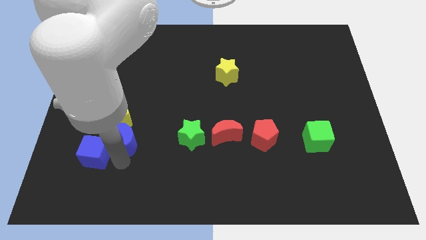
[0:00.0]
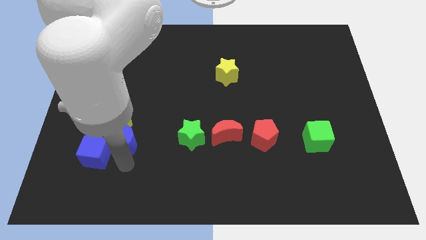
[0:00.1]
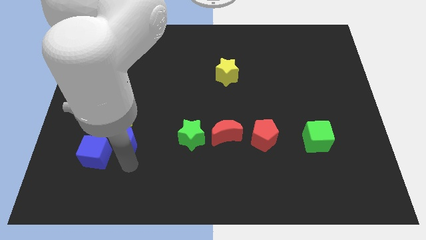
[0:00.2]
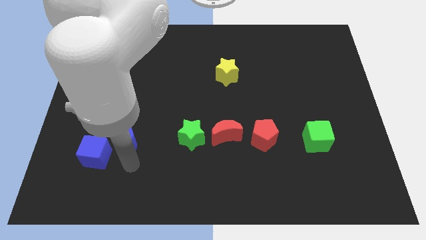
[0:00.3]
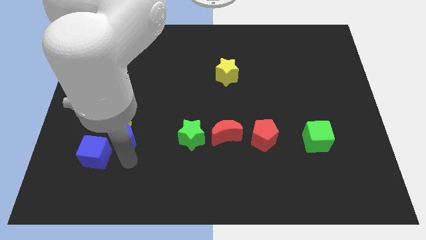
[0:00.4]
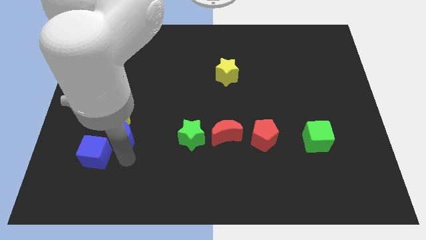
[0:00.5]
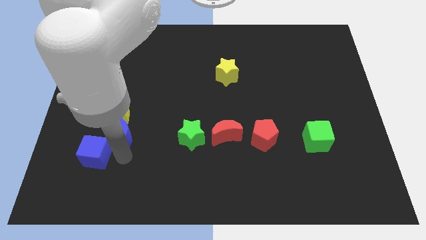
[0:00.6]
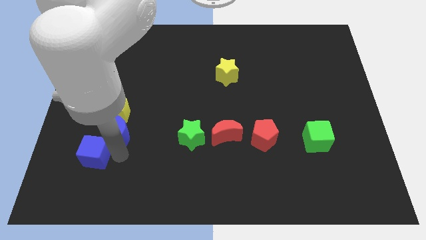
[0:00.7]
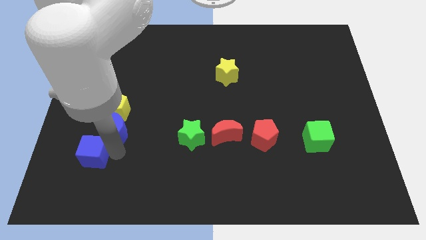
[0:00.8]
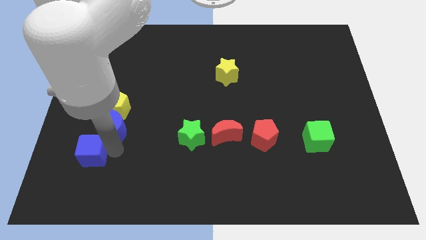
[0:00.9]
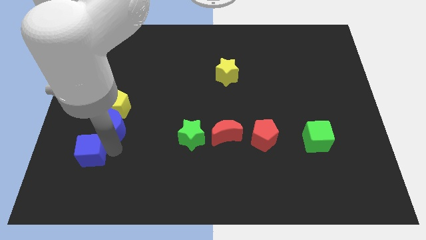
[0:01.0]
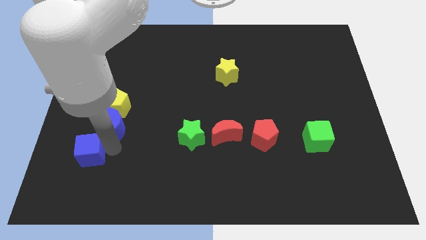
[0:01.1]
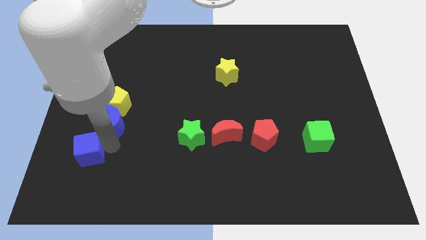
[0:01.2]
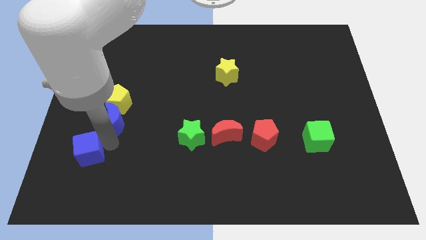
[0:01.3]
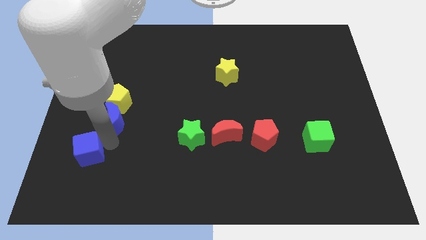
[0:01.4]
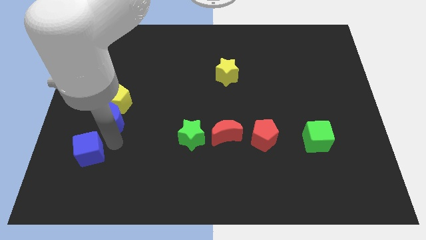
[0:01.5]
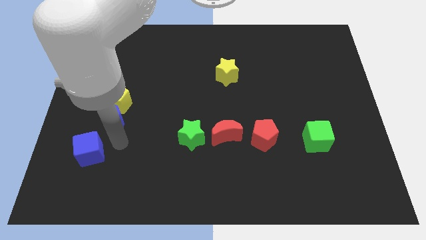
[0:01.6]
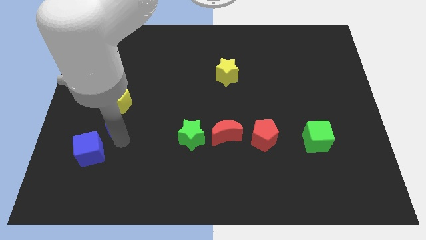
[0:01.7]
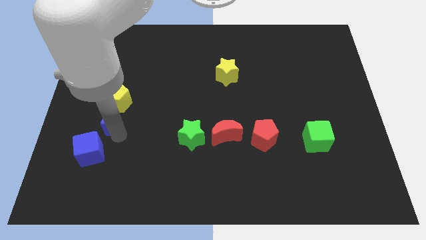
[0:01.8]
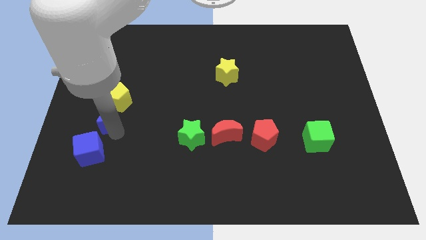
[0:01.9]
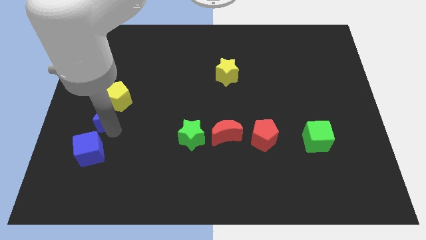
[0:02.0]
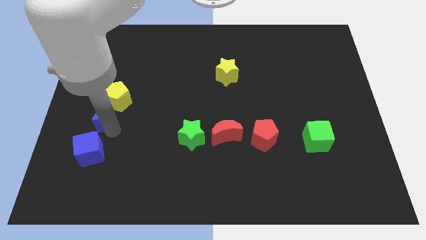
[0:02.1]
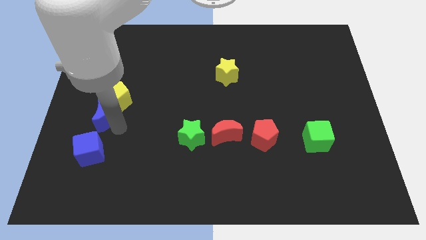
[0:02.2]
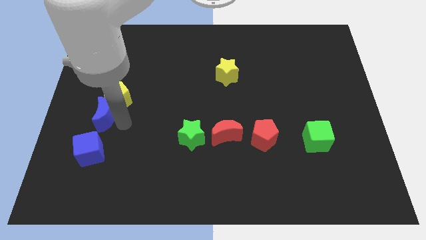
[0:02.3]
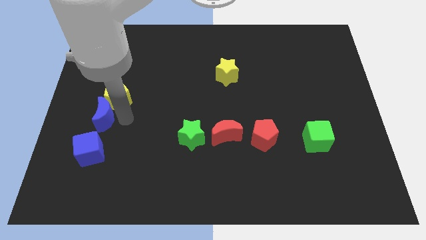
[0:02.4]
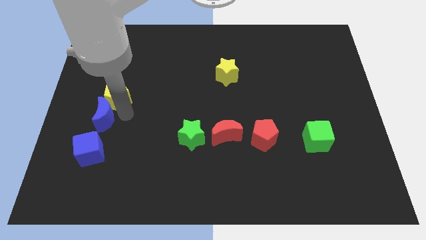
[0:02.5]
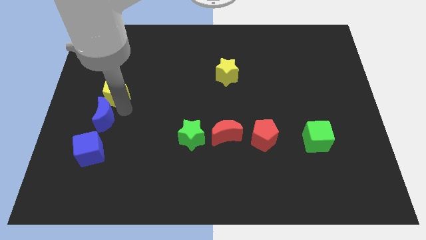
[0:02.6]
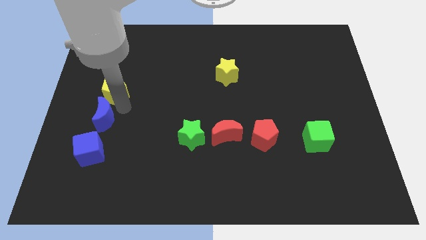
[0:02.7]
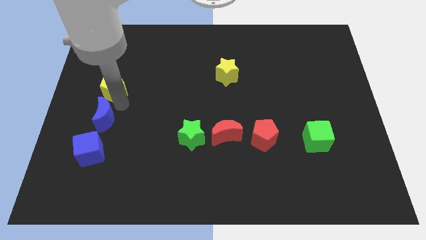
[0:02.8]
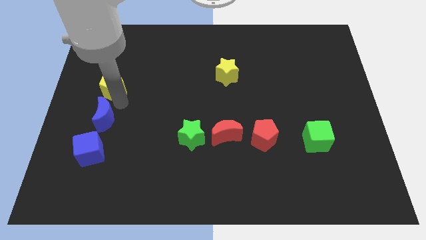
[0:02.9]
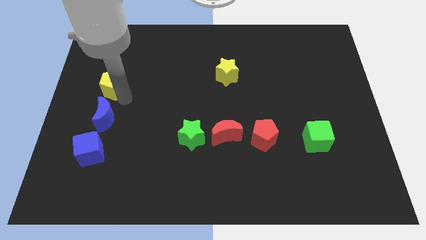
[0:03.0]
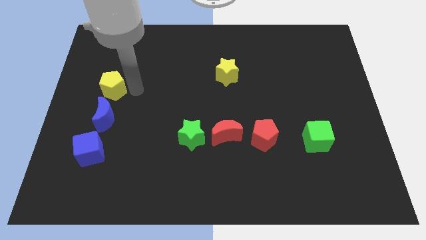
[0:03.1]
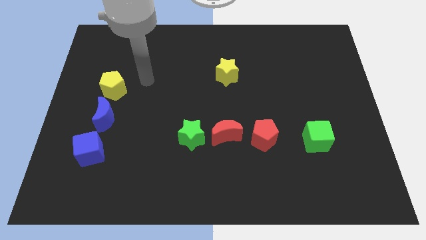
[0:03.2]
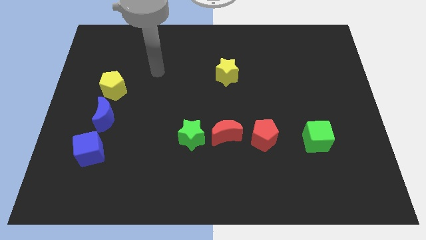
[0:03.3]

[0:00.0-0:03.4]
place the blue crescent in between the blue cube and yellow pentagon

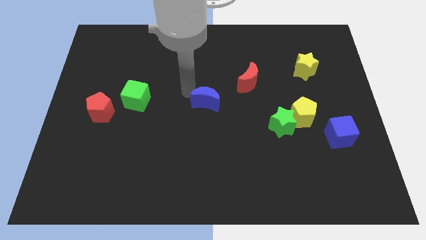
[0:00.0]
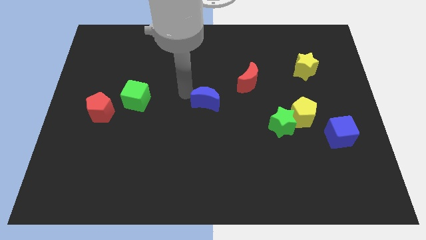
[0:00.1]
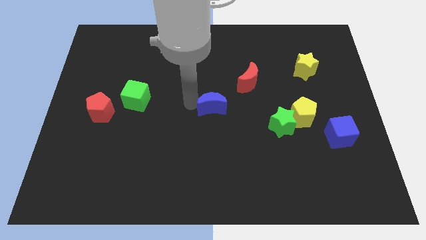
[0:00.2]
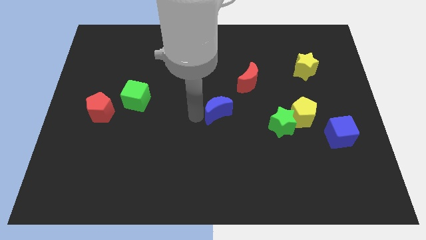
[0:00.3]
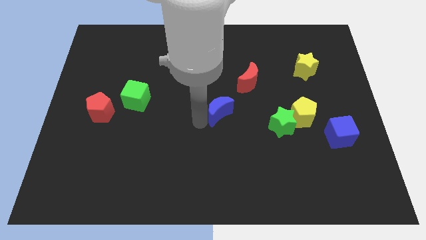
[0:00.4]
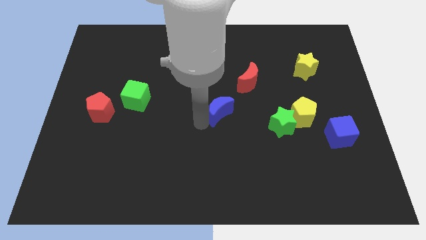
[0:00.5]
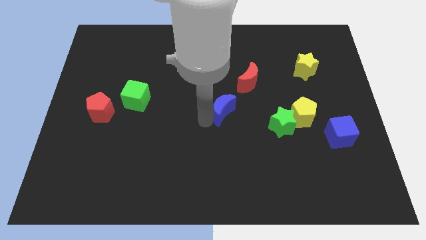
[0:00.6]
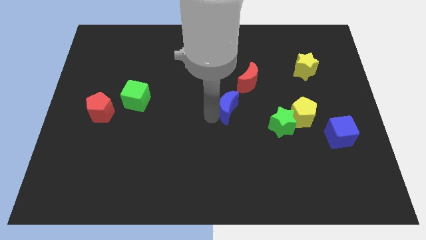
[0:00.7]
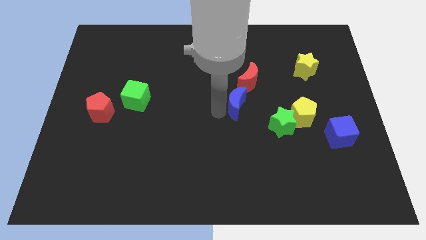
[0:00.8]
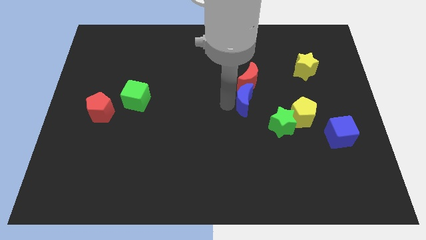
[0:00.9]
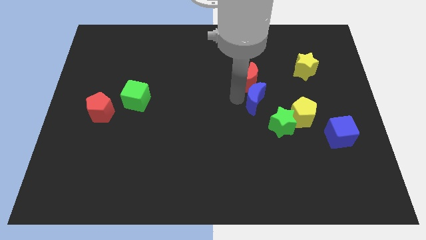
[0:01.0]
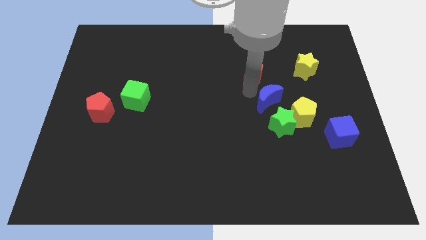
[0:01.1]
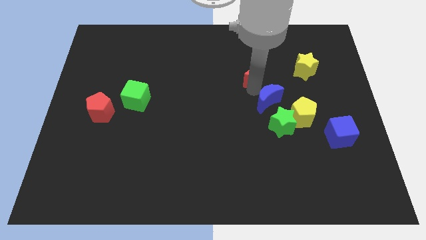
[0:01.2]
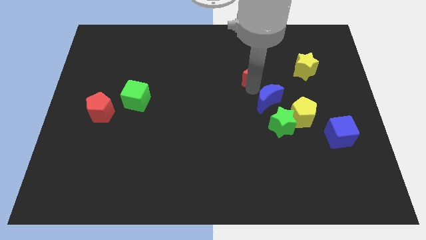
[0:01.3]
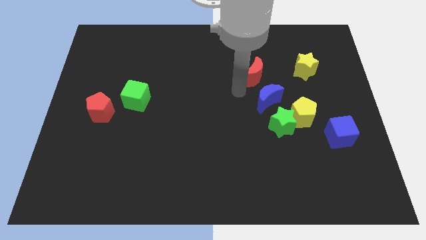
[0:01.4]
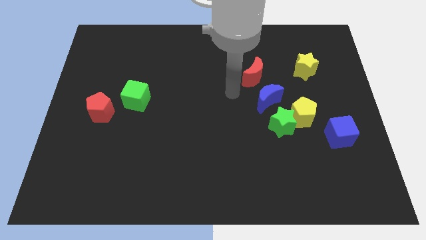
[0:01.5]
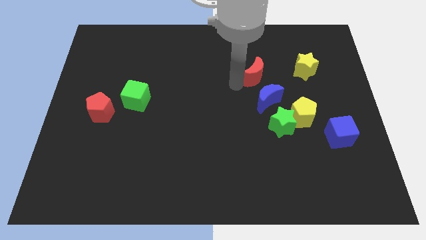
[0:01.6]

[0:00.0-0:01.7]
push the blue moon to the top side of the green star

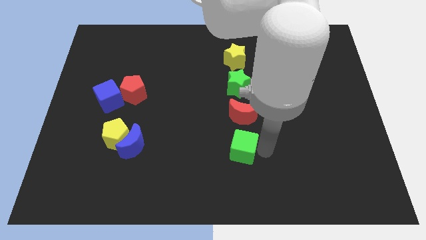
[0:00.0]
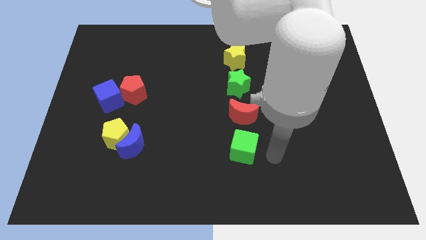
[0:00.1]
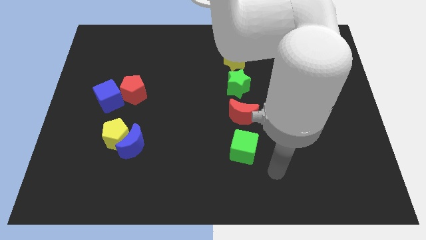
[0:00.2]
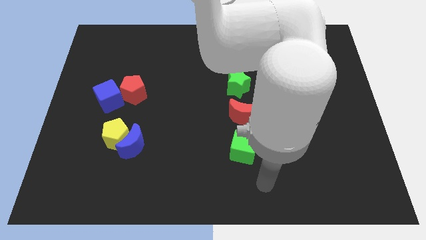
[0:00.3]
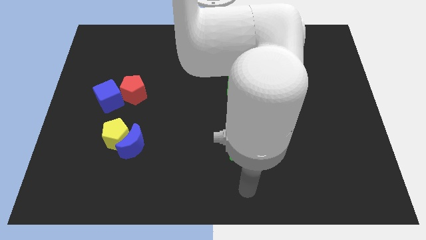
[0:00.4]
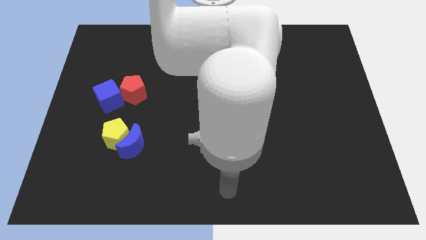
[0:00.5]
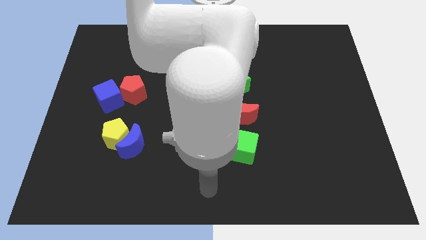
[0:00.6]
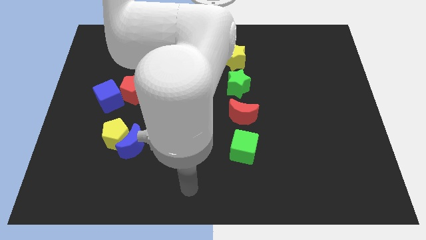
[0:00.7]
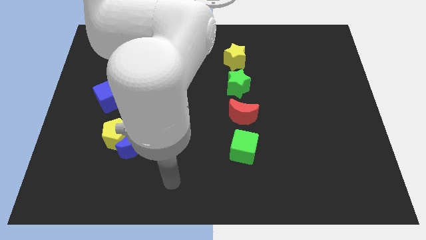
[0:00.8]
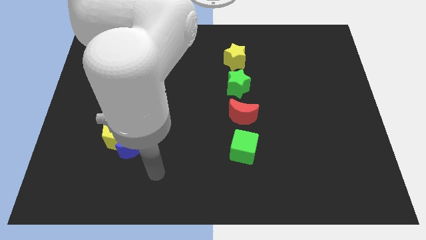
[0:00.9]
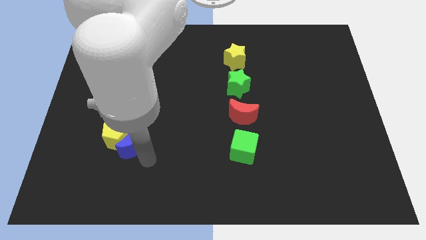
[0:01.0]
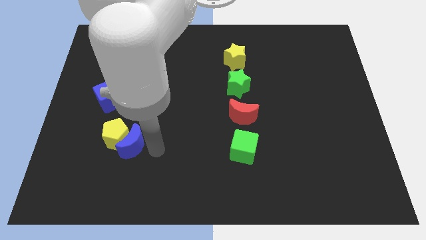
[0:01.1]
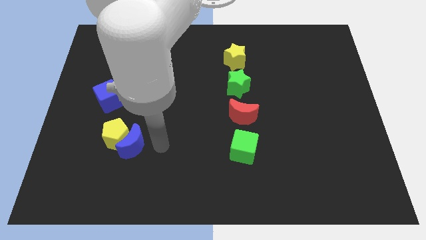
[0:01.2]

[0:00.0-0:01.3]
go and place your hand at the right of the blue crescent

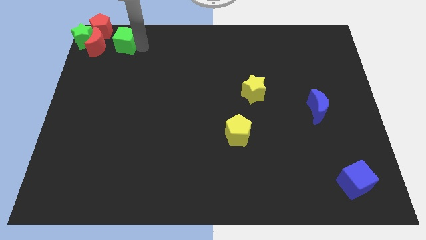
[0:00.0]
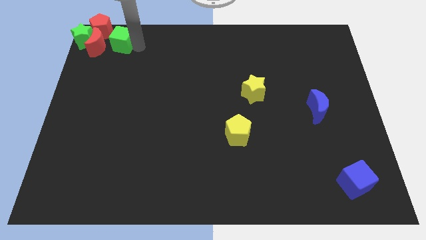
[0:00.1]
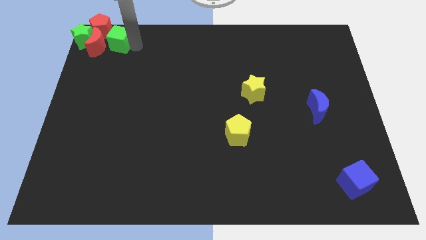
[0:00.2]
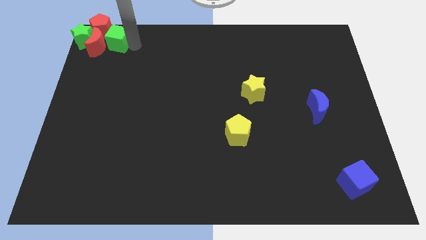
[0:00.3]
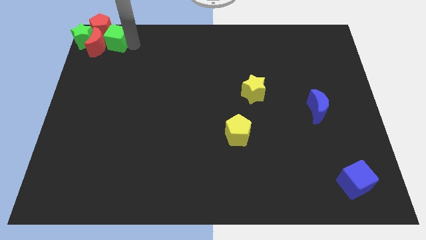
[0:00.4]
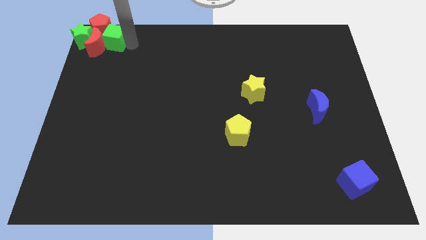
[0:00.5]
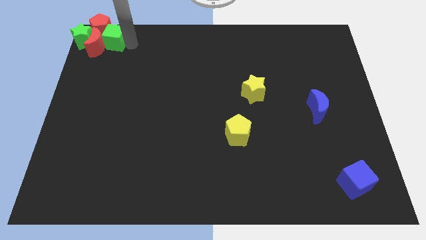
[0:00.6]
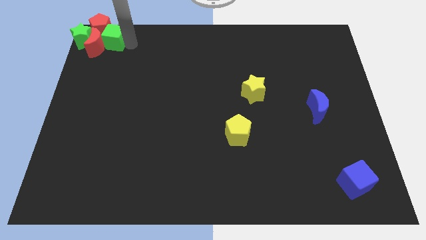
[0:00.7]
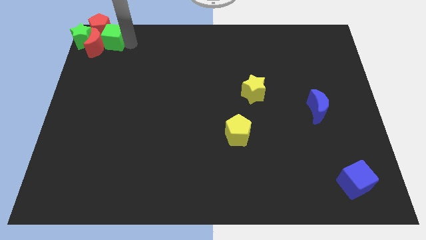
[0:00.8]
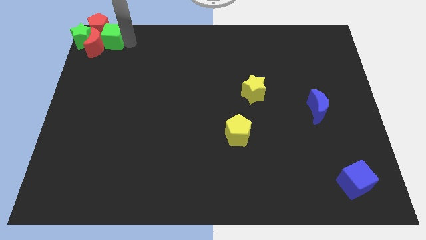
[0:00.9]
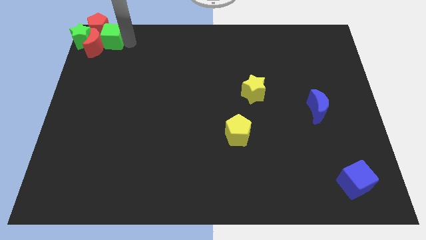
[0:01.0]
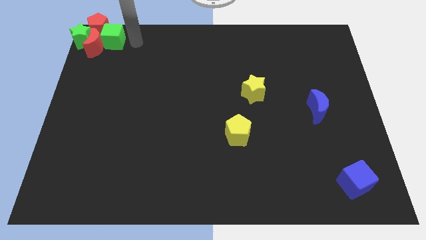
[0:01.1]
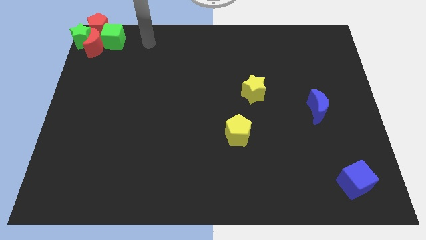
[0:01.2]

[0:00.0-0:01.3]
push the green cube into the group of blocks

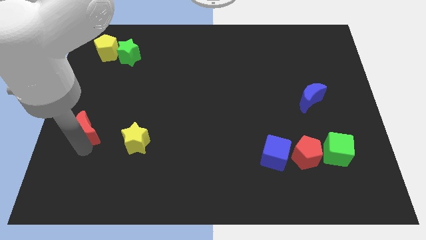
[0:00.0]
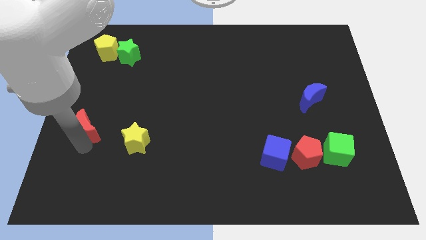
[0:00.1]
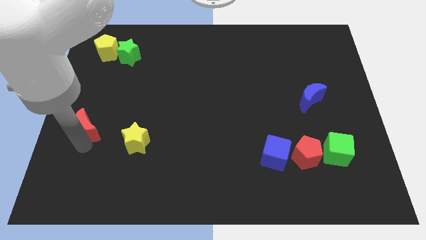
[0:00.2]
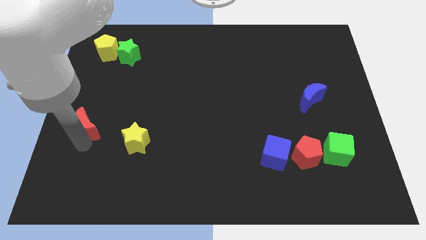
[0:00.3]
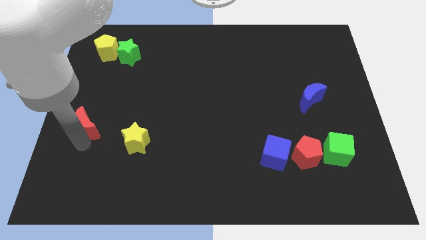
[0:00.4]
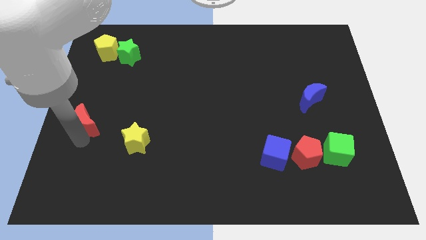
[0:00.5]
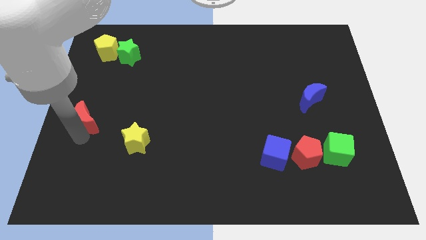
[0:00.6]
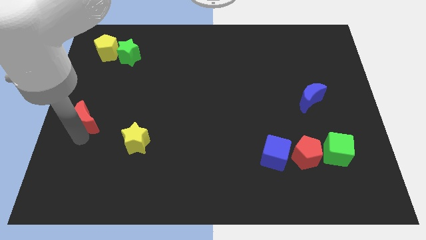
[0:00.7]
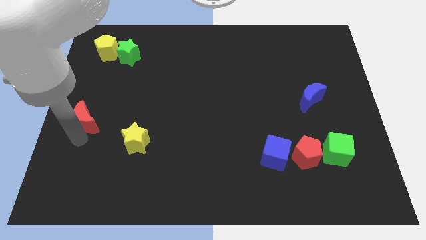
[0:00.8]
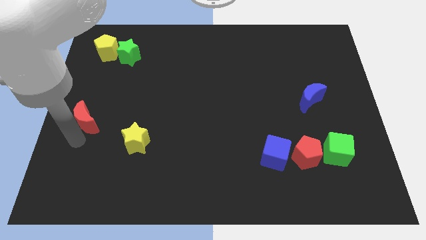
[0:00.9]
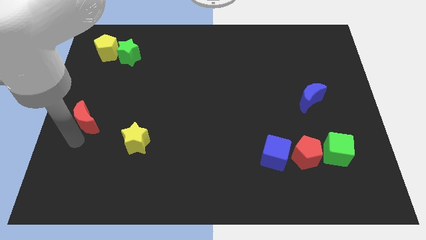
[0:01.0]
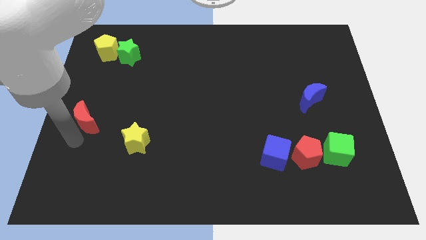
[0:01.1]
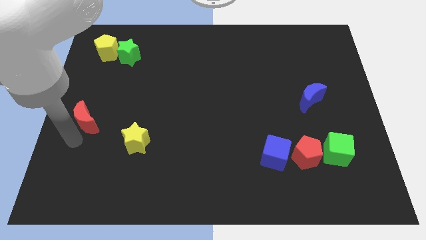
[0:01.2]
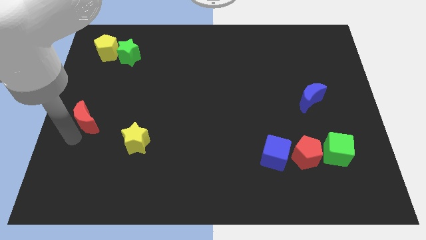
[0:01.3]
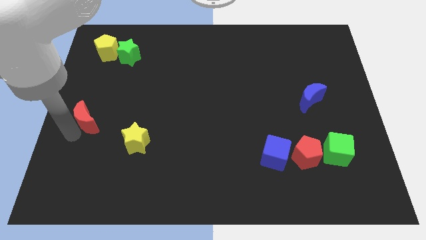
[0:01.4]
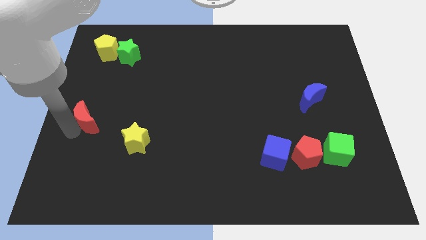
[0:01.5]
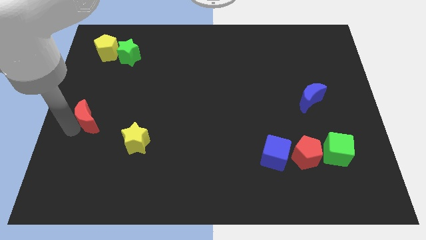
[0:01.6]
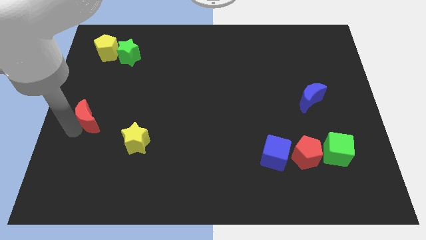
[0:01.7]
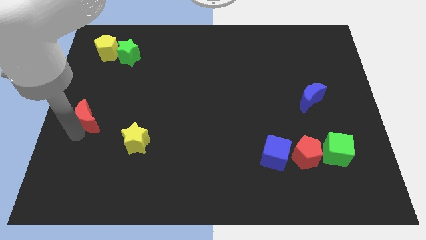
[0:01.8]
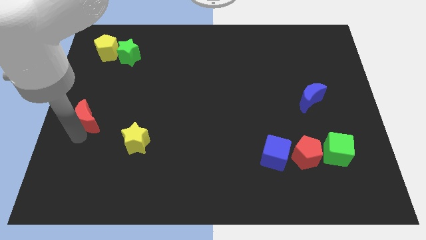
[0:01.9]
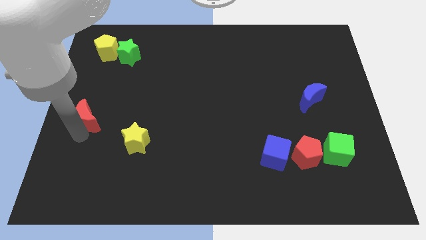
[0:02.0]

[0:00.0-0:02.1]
slide the red crescent slightly up
